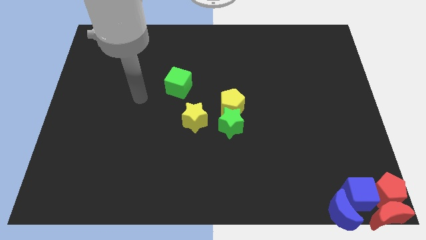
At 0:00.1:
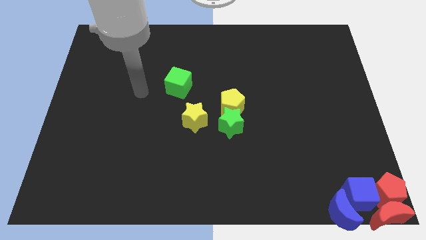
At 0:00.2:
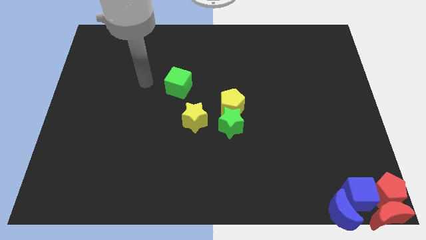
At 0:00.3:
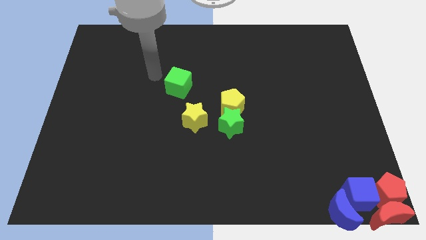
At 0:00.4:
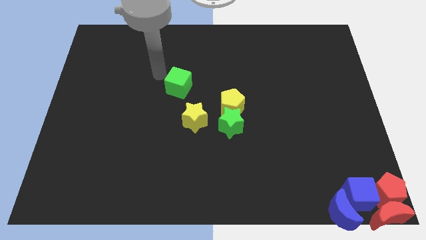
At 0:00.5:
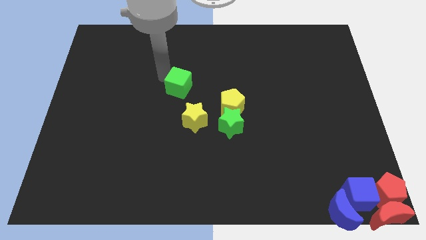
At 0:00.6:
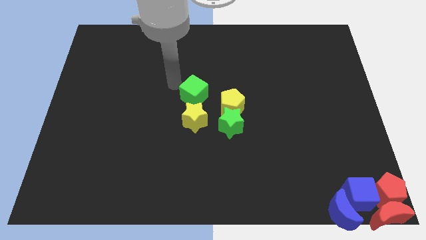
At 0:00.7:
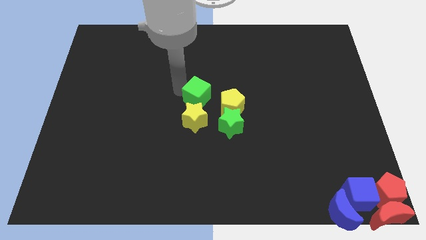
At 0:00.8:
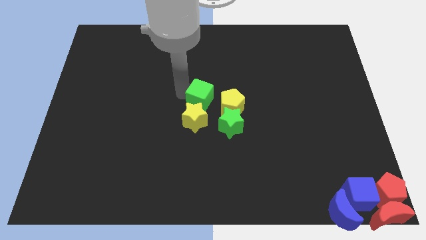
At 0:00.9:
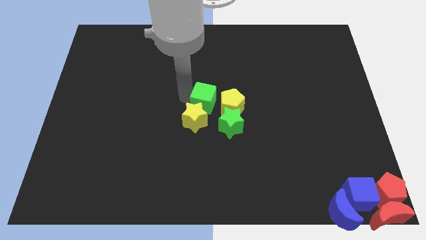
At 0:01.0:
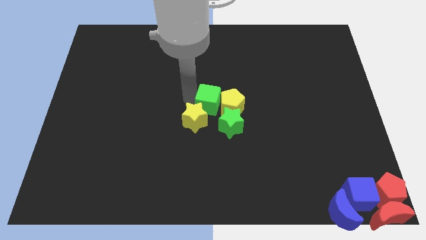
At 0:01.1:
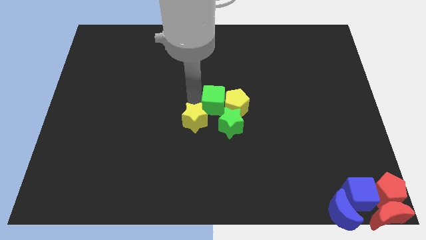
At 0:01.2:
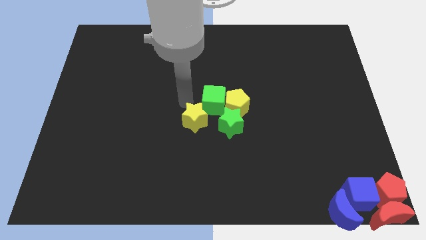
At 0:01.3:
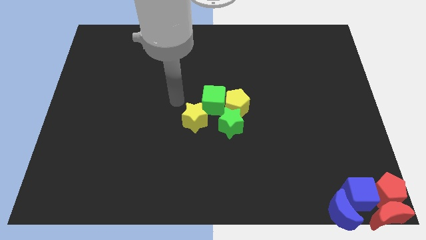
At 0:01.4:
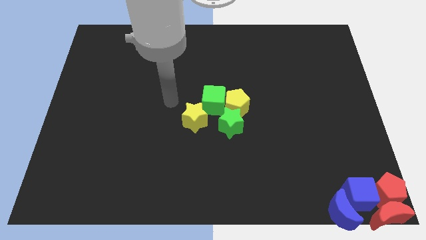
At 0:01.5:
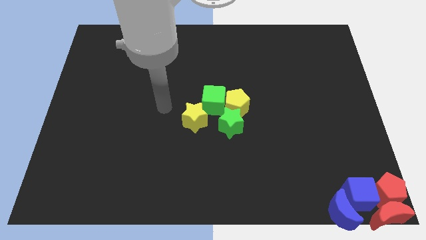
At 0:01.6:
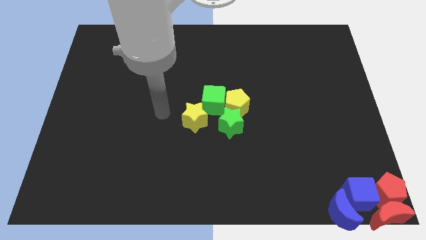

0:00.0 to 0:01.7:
push the green cube into the yellow pentagon

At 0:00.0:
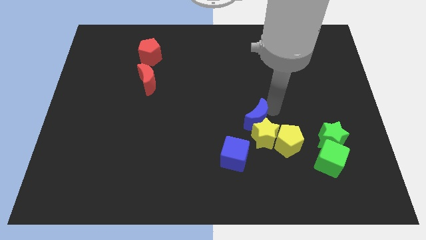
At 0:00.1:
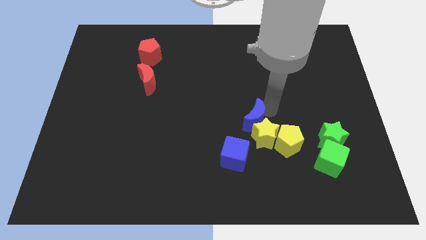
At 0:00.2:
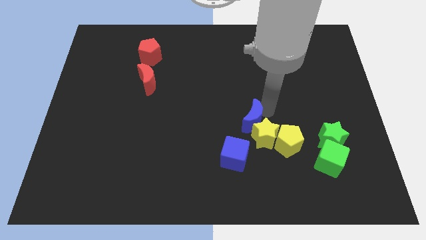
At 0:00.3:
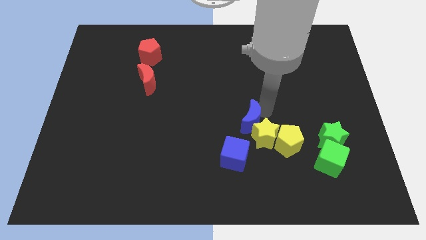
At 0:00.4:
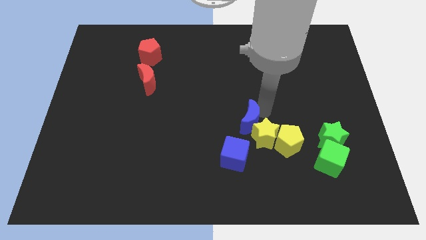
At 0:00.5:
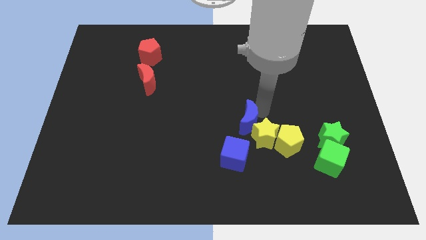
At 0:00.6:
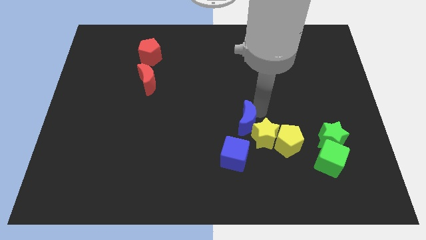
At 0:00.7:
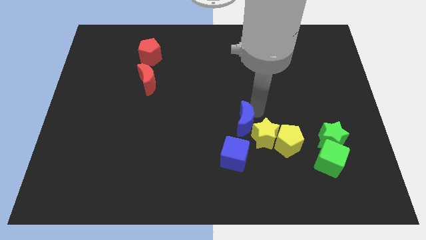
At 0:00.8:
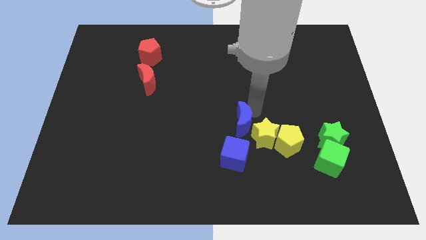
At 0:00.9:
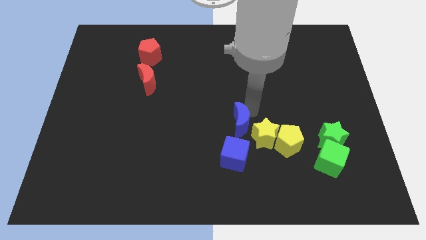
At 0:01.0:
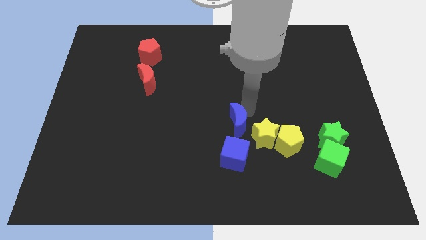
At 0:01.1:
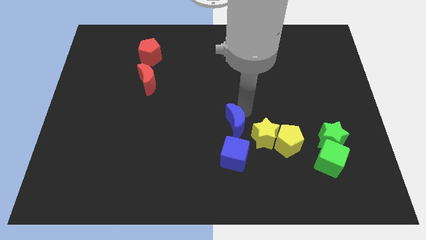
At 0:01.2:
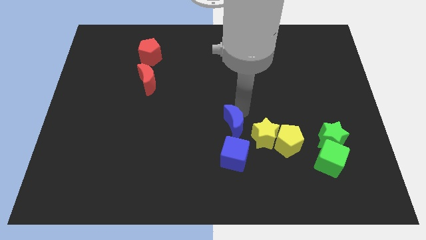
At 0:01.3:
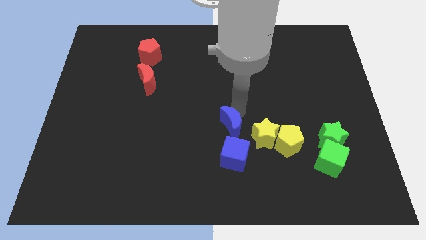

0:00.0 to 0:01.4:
push the blue crescent to the left of the yellow star

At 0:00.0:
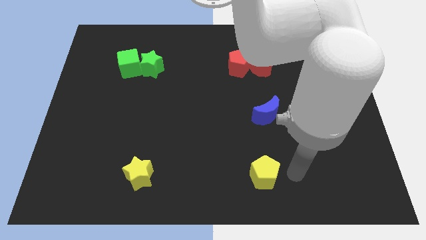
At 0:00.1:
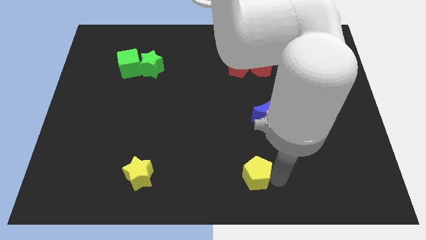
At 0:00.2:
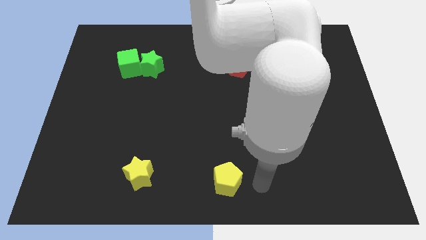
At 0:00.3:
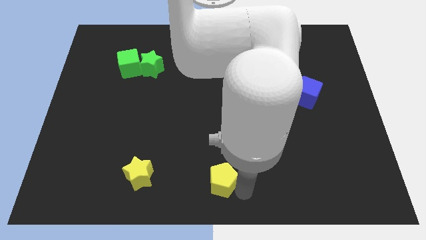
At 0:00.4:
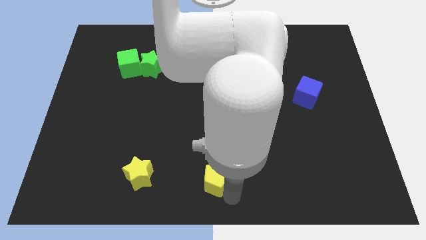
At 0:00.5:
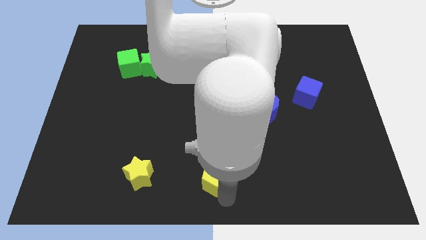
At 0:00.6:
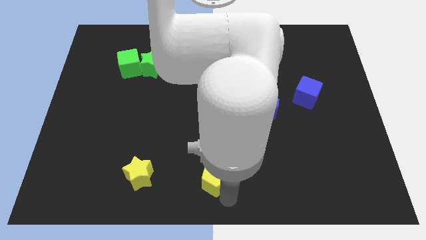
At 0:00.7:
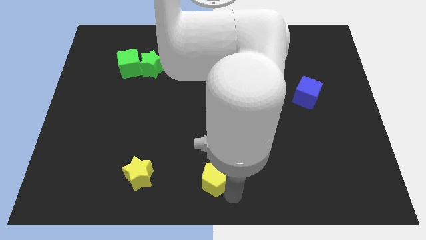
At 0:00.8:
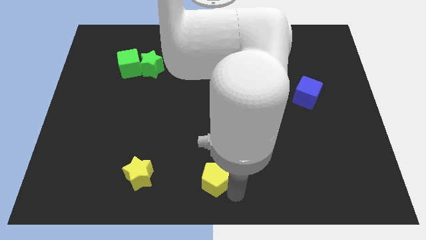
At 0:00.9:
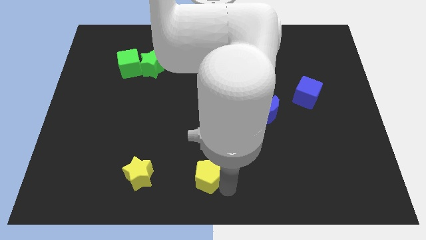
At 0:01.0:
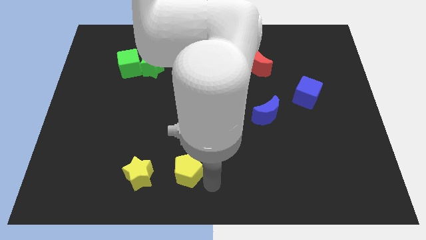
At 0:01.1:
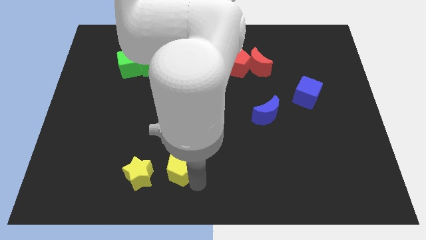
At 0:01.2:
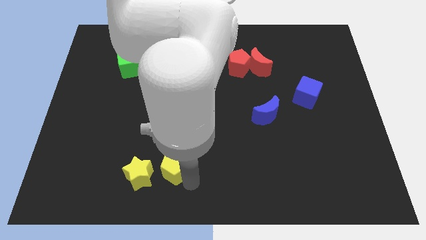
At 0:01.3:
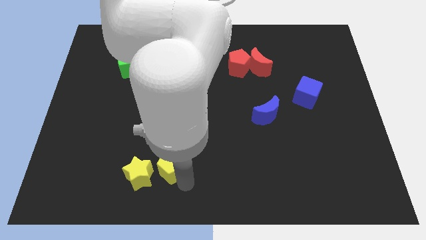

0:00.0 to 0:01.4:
place the yellow pentagon to the right side of yellow star

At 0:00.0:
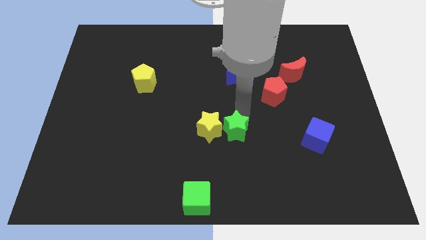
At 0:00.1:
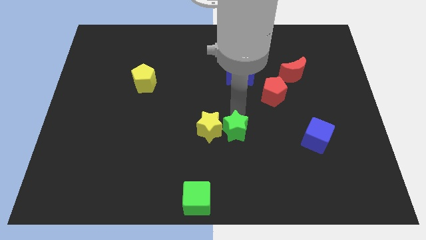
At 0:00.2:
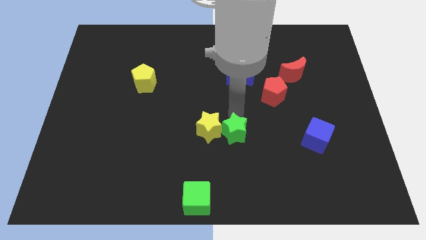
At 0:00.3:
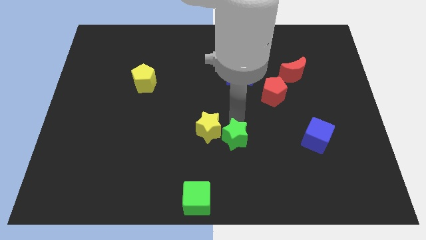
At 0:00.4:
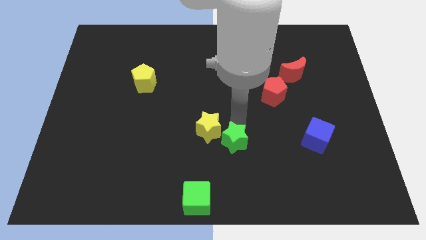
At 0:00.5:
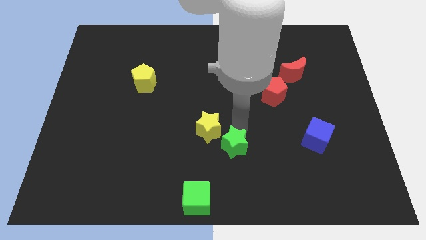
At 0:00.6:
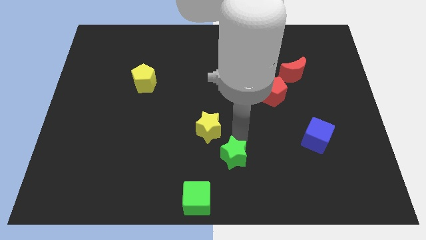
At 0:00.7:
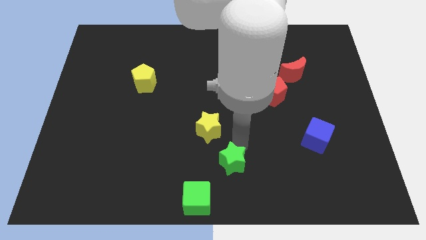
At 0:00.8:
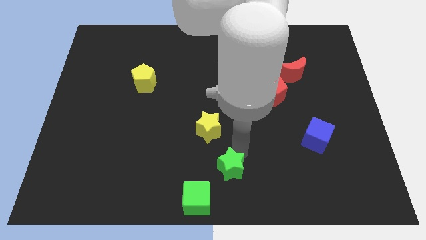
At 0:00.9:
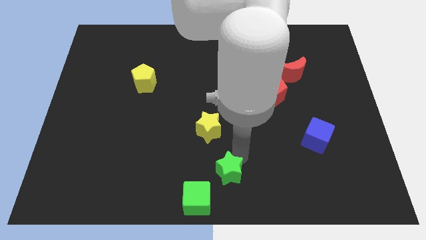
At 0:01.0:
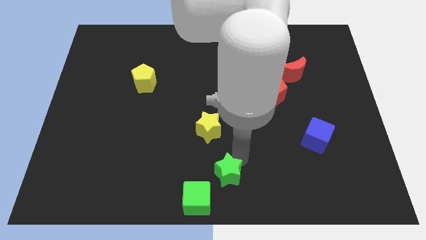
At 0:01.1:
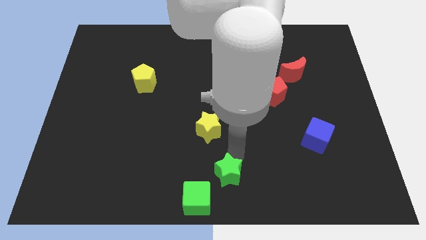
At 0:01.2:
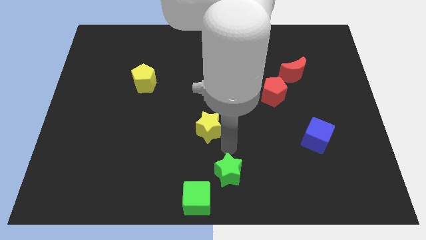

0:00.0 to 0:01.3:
push the green star towards bottom center

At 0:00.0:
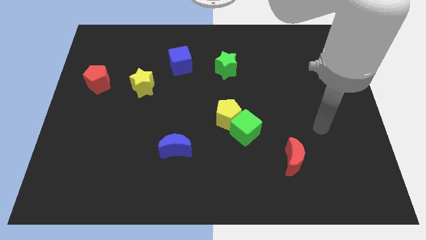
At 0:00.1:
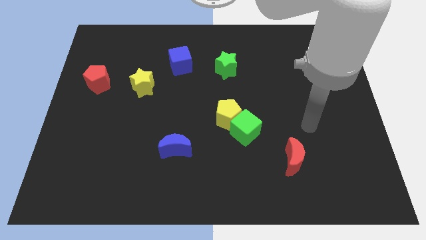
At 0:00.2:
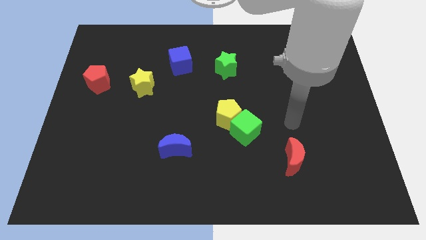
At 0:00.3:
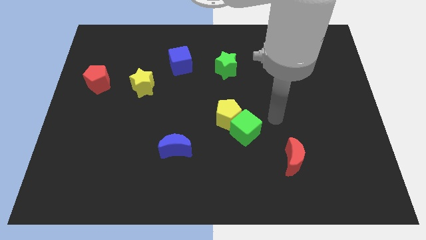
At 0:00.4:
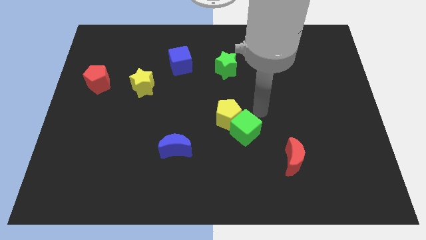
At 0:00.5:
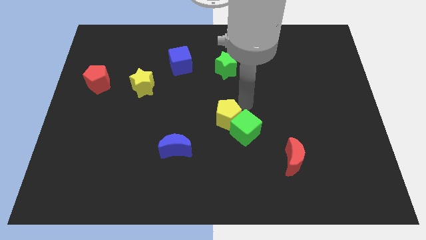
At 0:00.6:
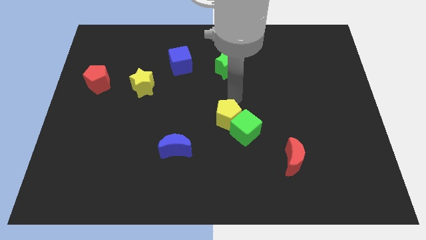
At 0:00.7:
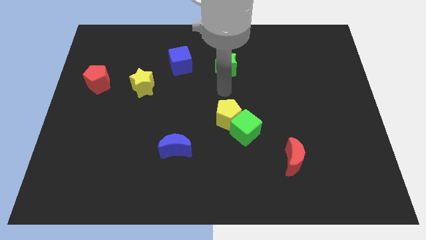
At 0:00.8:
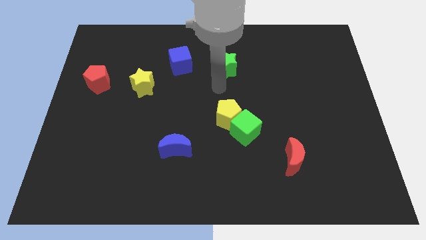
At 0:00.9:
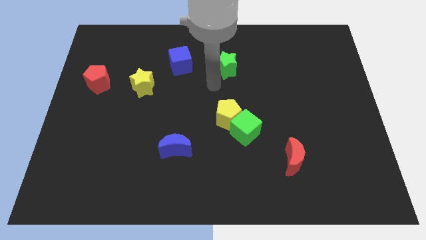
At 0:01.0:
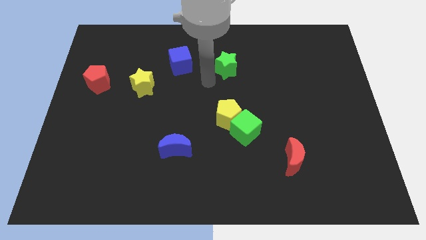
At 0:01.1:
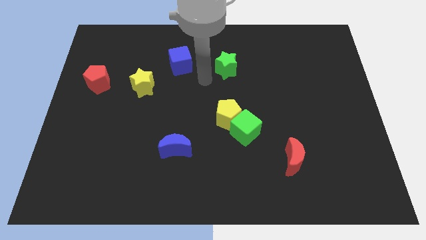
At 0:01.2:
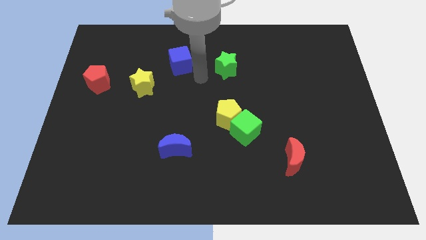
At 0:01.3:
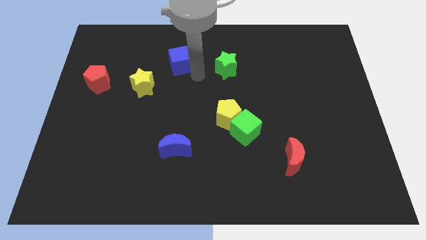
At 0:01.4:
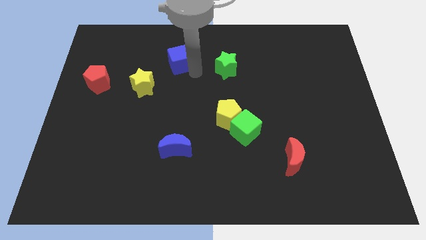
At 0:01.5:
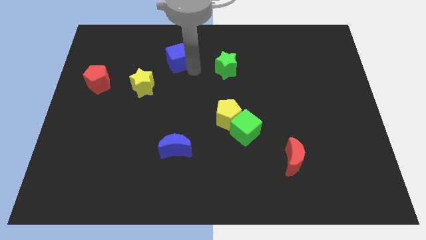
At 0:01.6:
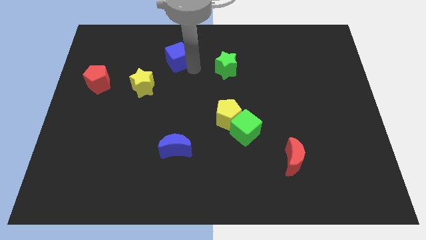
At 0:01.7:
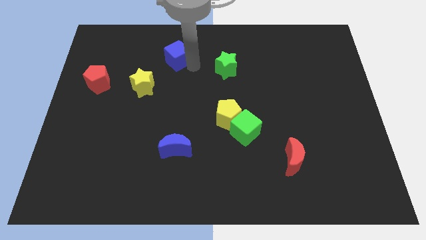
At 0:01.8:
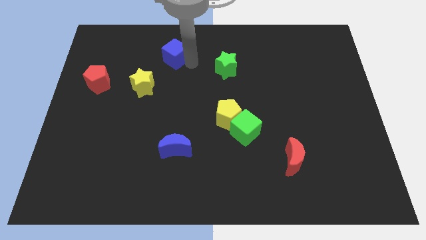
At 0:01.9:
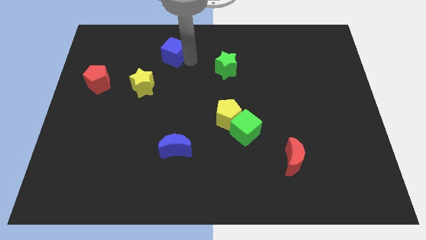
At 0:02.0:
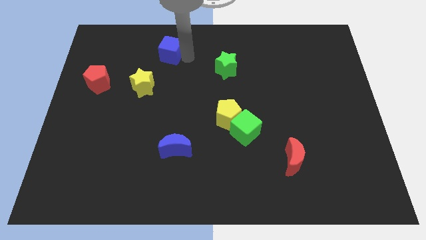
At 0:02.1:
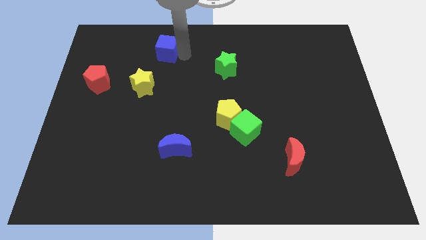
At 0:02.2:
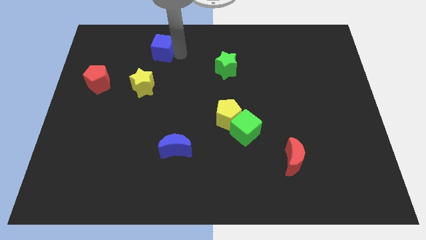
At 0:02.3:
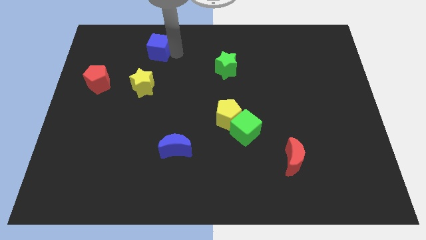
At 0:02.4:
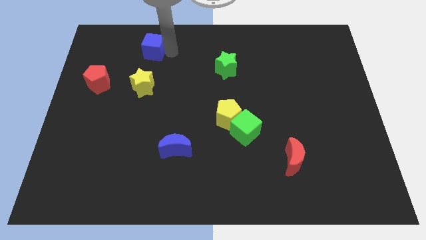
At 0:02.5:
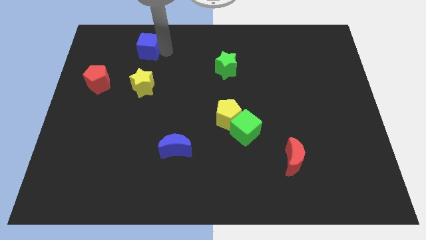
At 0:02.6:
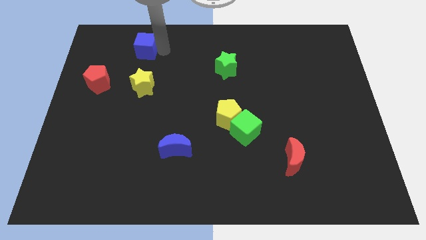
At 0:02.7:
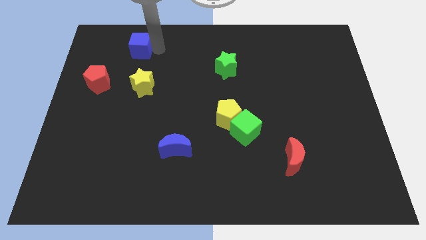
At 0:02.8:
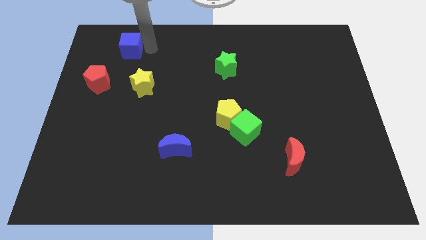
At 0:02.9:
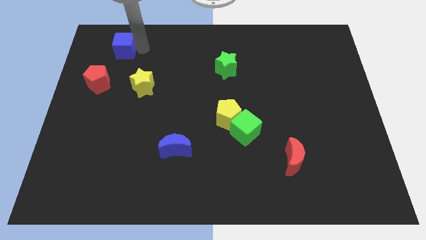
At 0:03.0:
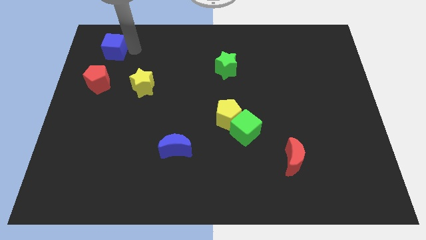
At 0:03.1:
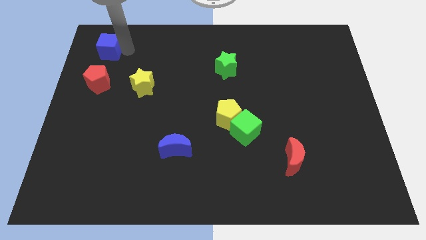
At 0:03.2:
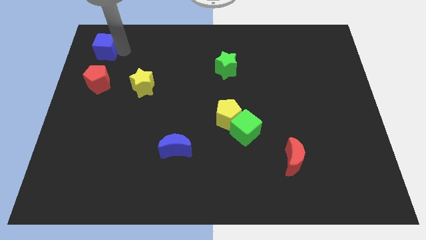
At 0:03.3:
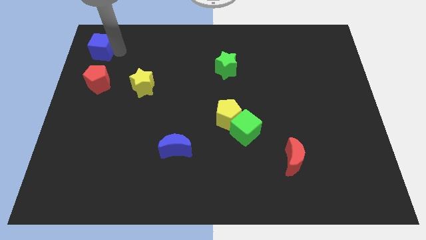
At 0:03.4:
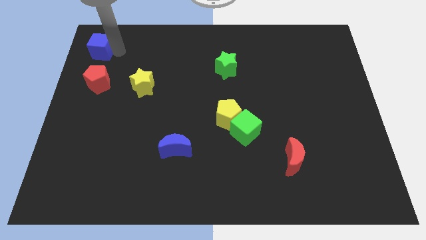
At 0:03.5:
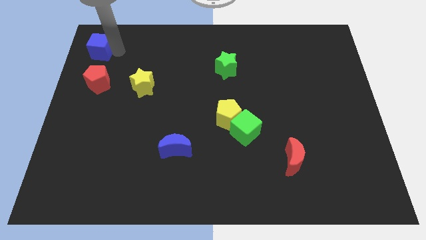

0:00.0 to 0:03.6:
push the blue cube to the top left
